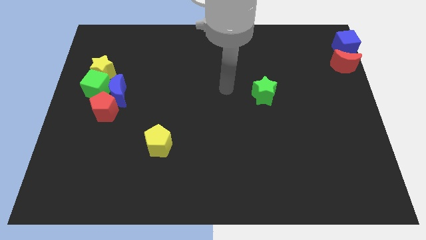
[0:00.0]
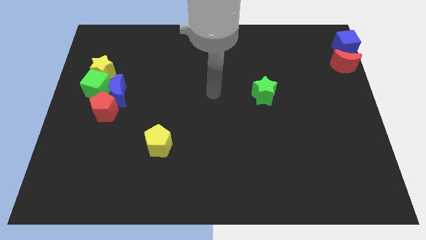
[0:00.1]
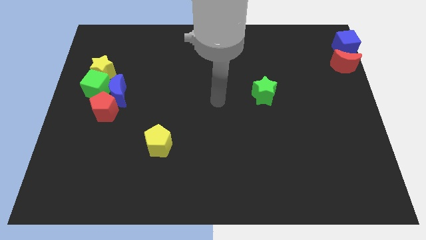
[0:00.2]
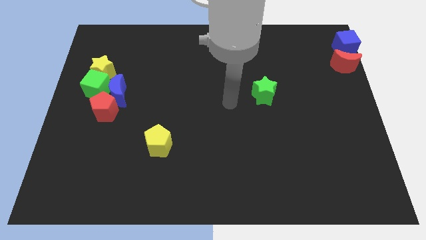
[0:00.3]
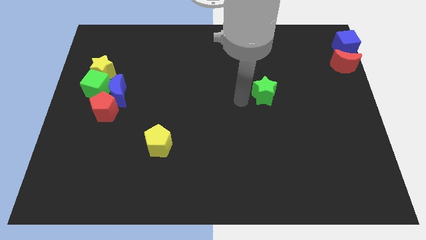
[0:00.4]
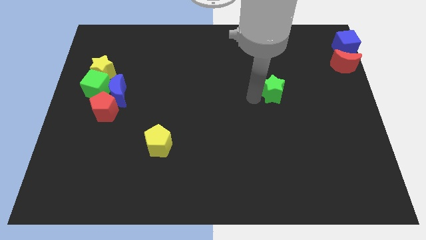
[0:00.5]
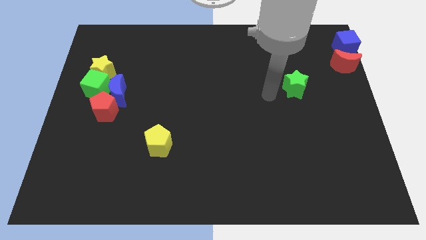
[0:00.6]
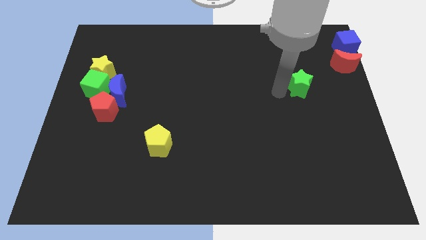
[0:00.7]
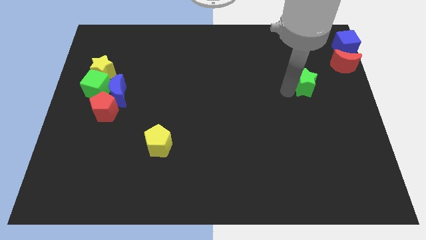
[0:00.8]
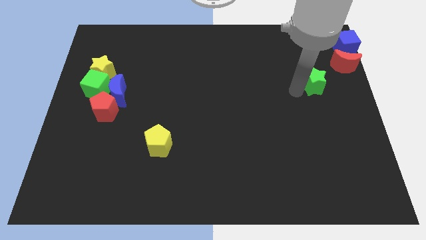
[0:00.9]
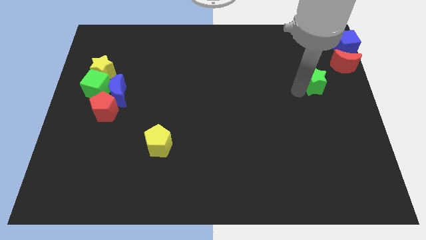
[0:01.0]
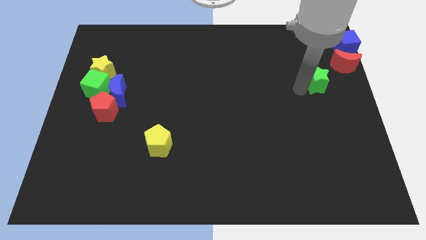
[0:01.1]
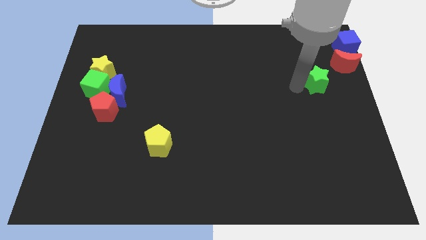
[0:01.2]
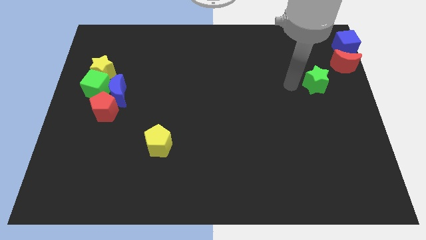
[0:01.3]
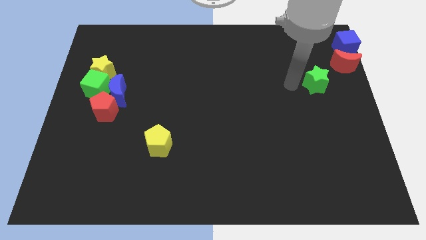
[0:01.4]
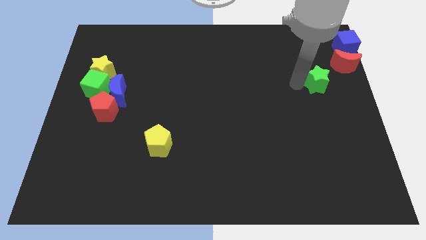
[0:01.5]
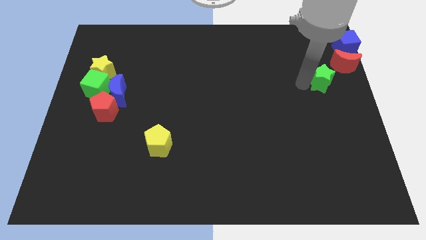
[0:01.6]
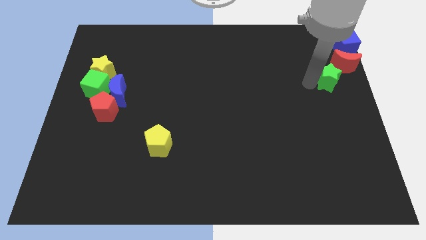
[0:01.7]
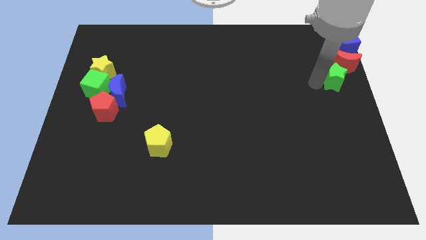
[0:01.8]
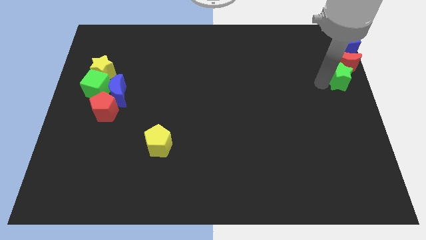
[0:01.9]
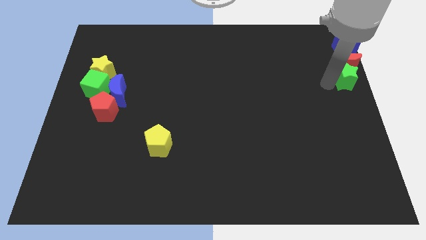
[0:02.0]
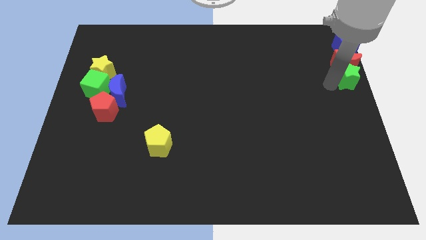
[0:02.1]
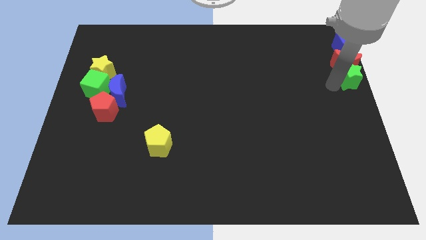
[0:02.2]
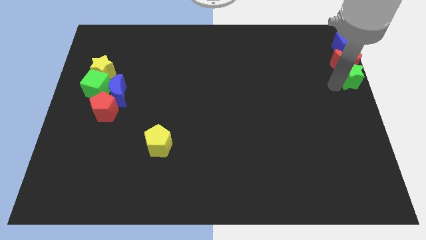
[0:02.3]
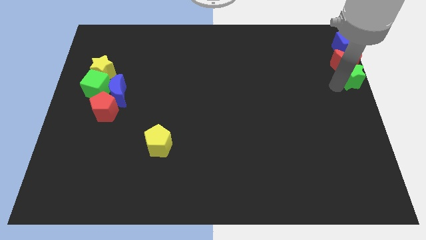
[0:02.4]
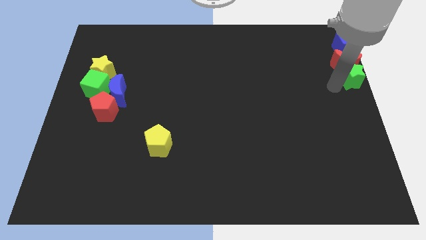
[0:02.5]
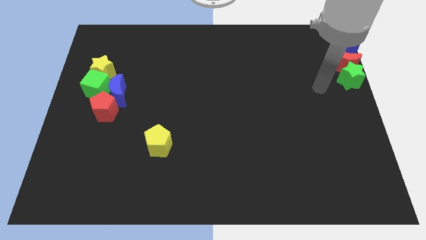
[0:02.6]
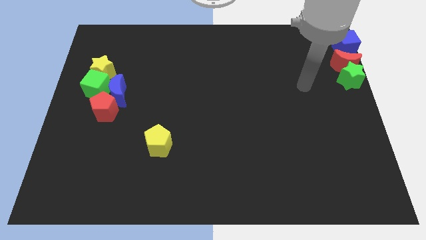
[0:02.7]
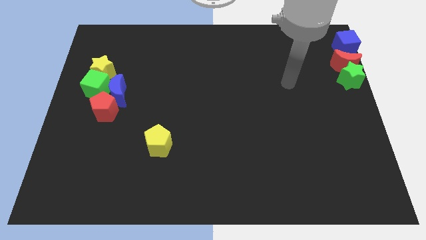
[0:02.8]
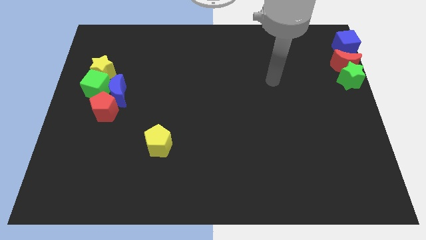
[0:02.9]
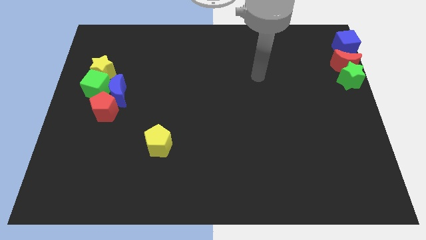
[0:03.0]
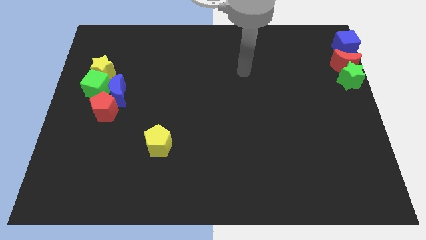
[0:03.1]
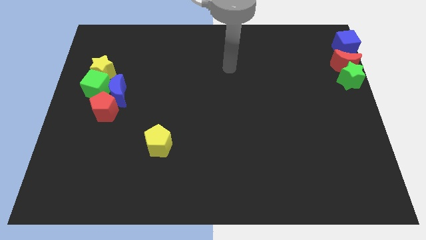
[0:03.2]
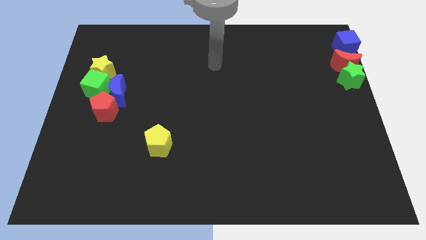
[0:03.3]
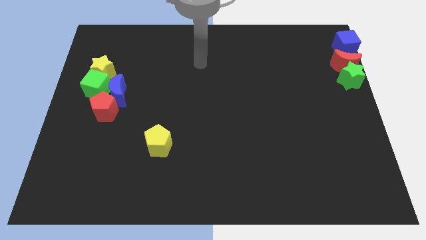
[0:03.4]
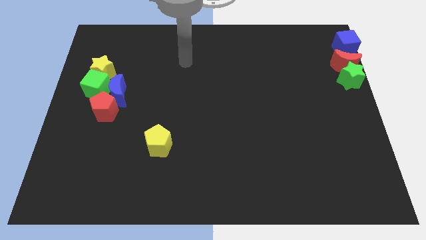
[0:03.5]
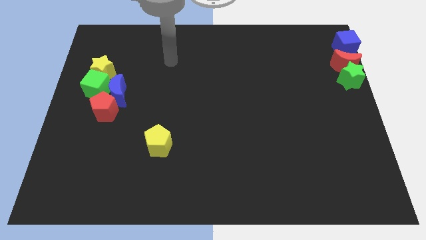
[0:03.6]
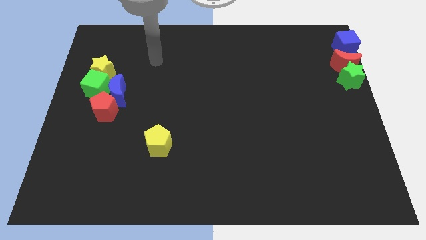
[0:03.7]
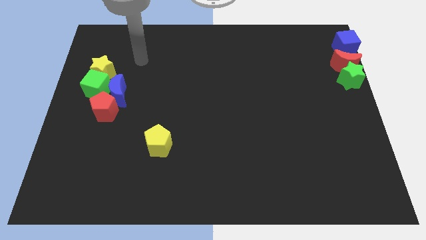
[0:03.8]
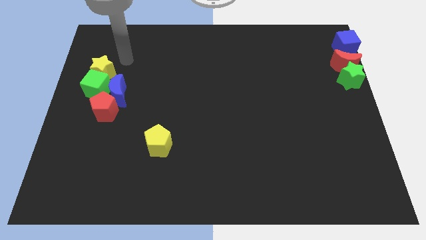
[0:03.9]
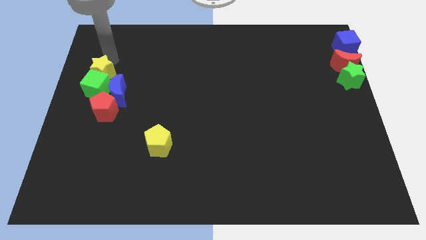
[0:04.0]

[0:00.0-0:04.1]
push the green star below to the red crescent

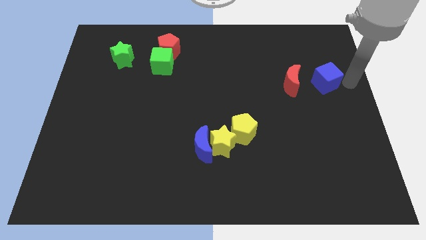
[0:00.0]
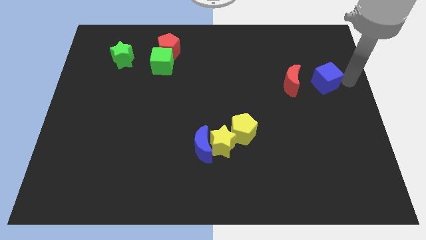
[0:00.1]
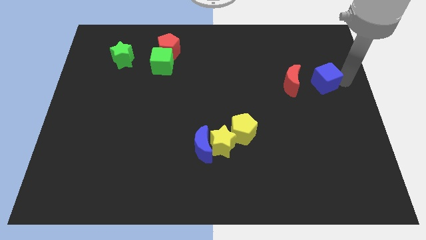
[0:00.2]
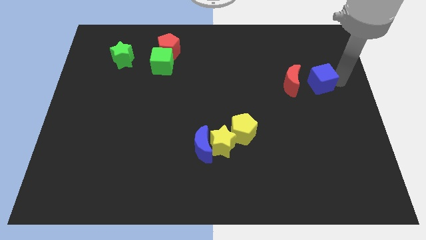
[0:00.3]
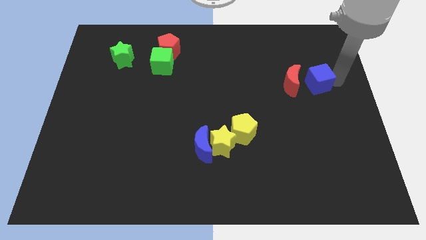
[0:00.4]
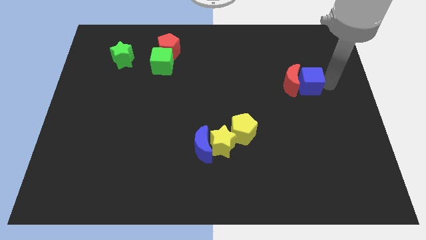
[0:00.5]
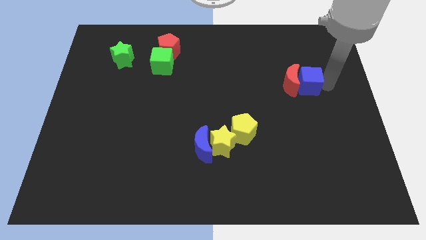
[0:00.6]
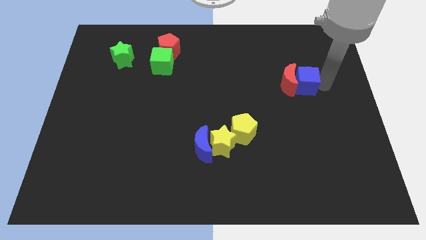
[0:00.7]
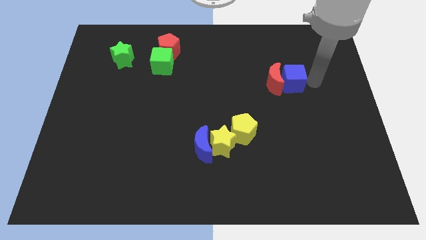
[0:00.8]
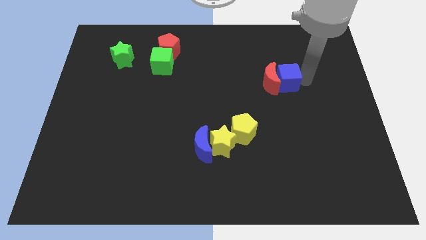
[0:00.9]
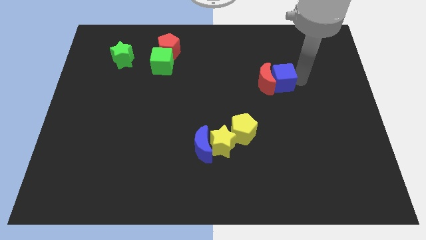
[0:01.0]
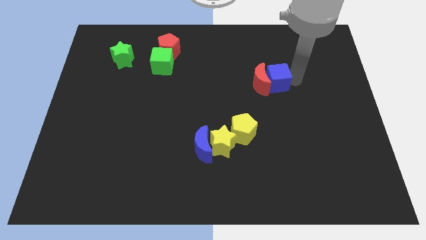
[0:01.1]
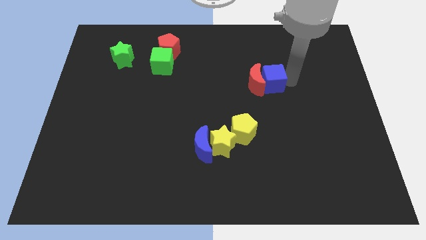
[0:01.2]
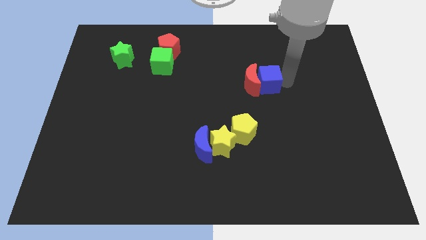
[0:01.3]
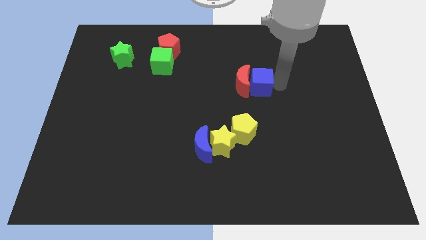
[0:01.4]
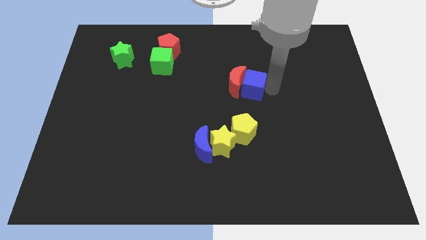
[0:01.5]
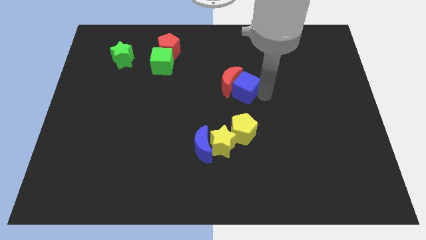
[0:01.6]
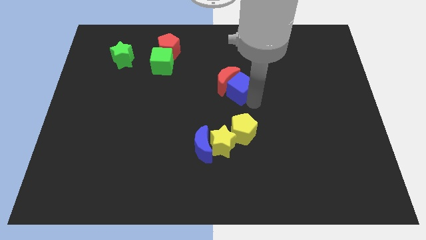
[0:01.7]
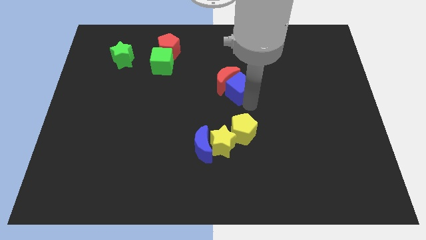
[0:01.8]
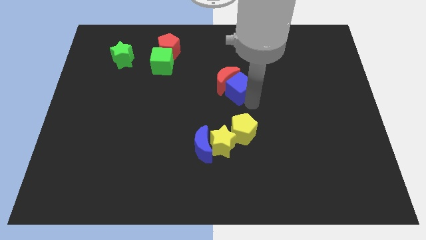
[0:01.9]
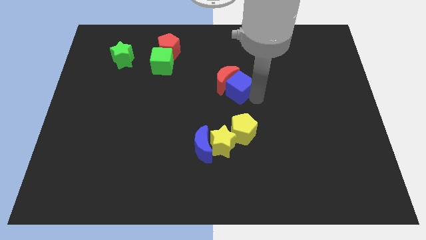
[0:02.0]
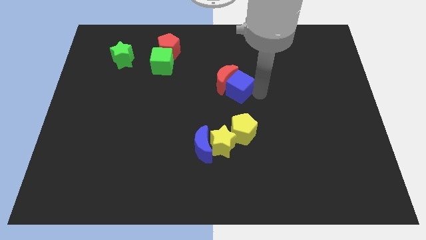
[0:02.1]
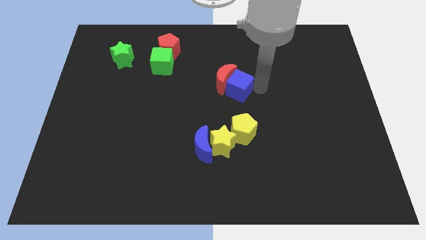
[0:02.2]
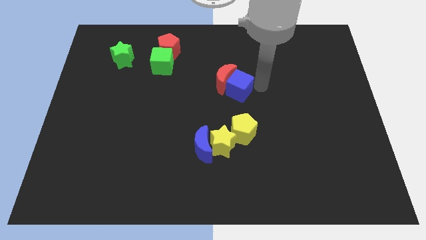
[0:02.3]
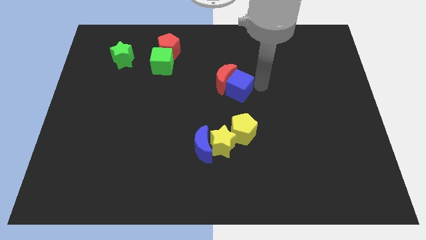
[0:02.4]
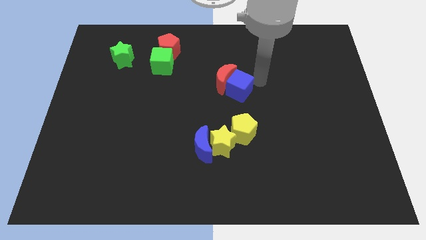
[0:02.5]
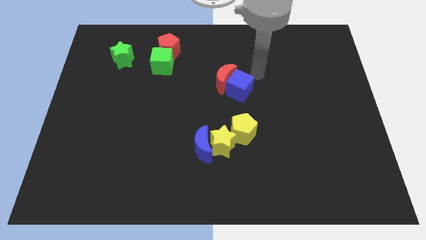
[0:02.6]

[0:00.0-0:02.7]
push the red moon with blue cube towards the center of the board

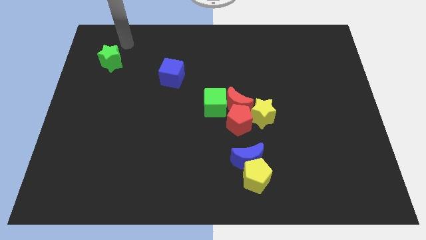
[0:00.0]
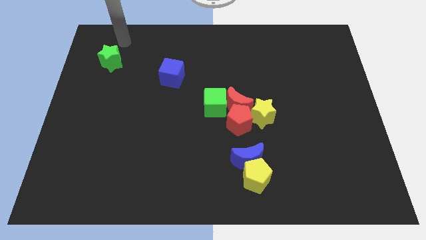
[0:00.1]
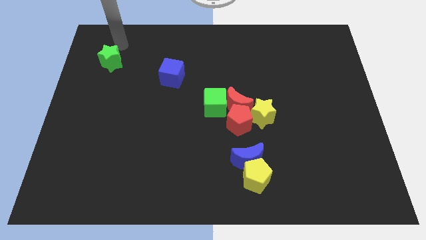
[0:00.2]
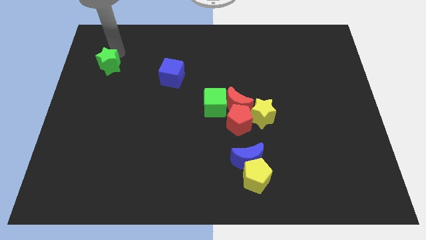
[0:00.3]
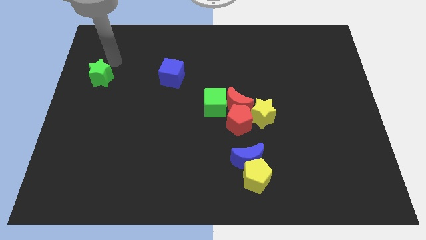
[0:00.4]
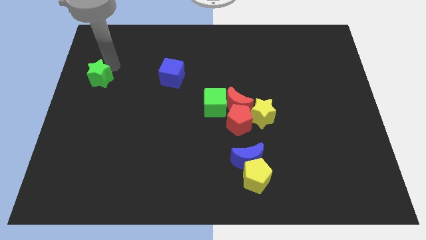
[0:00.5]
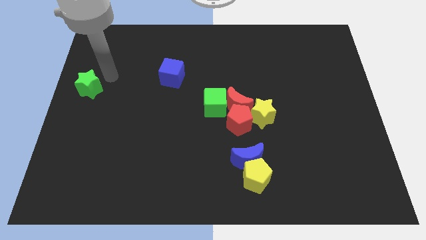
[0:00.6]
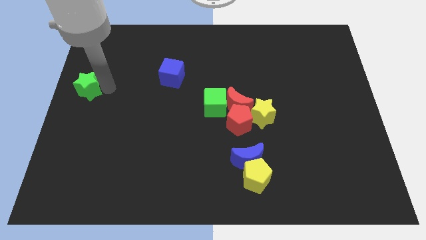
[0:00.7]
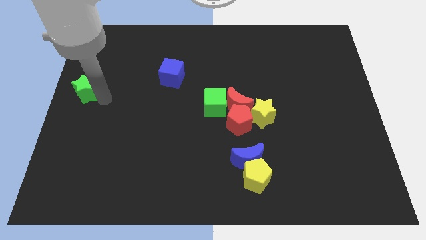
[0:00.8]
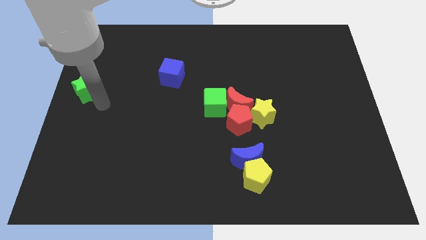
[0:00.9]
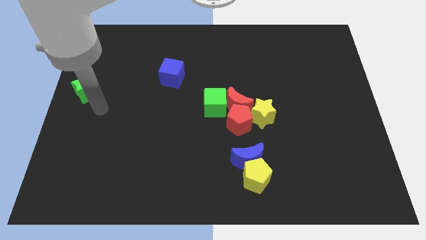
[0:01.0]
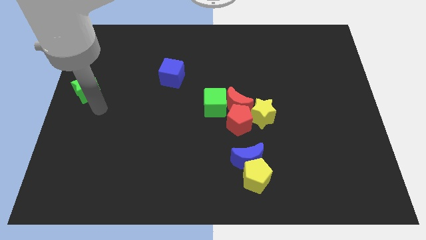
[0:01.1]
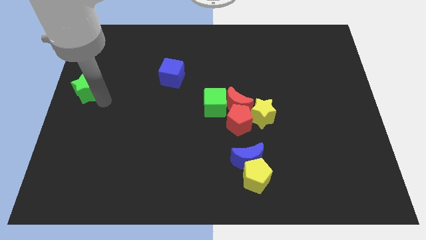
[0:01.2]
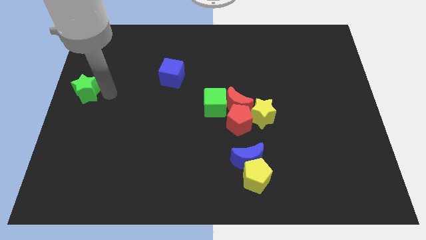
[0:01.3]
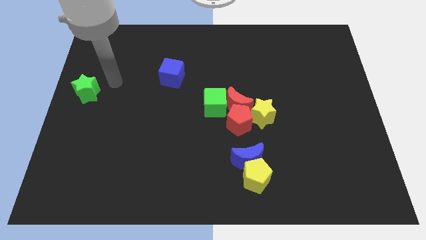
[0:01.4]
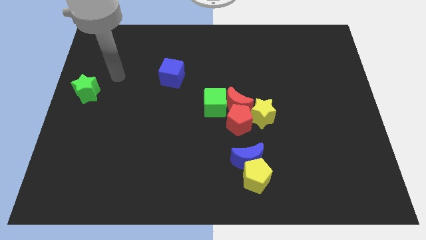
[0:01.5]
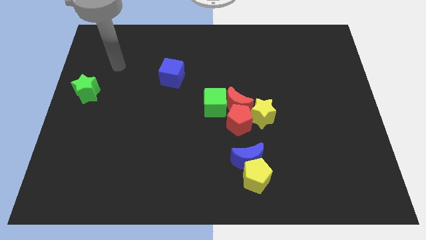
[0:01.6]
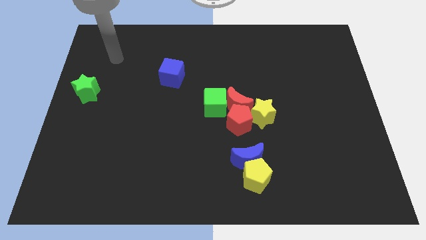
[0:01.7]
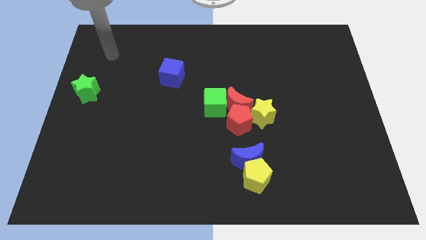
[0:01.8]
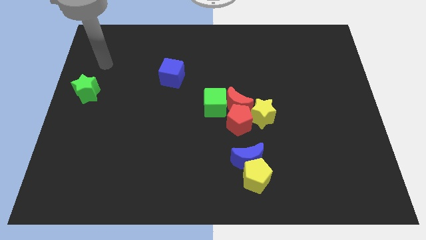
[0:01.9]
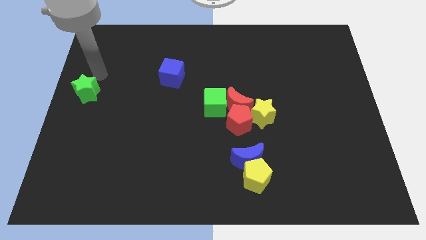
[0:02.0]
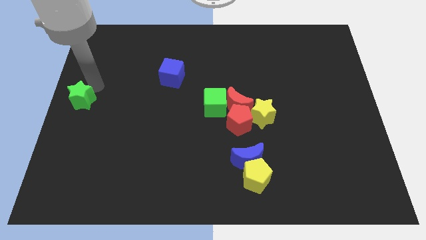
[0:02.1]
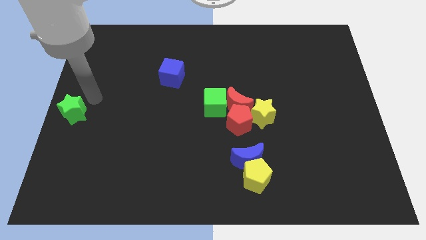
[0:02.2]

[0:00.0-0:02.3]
place the green star at the center left of the board
